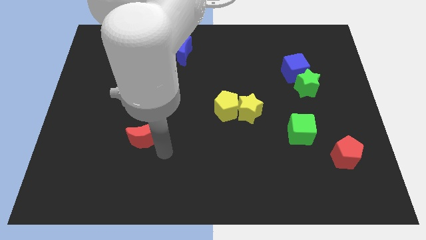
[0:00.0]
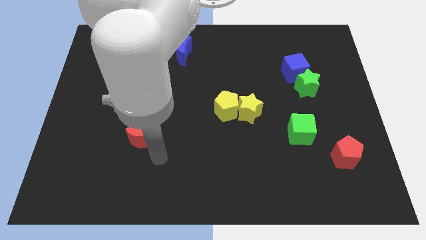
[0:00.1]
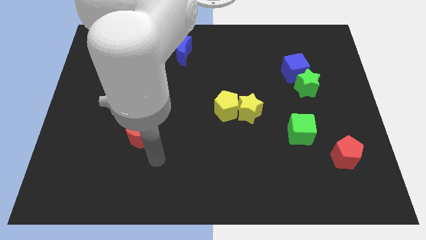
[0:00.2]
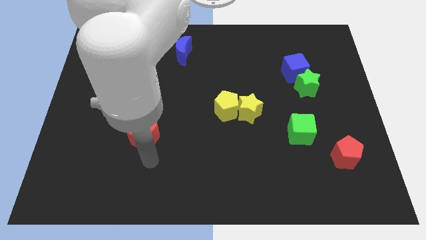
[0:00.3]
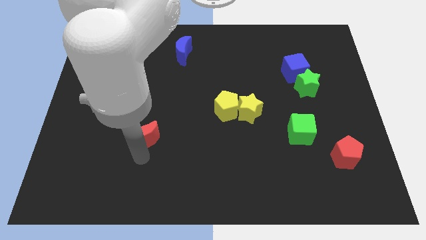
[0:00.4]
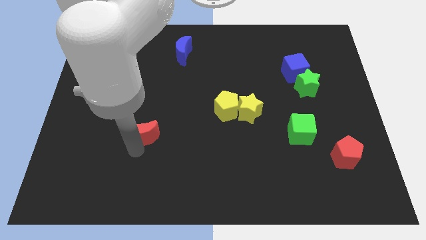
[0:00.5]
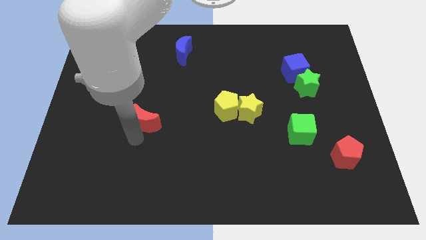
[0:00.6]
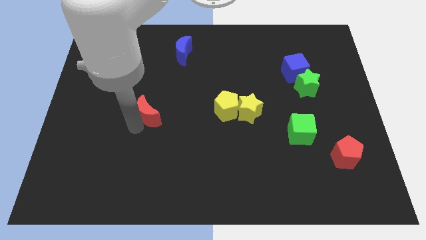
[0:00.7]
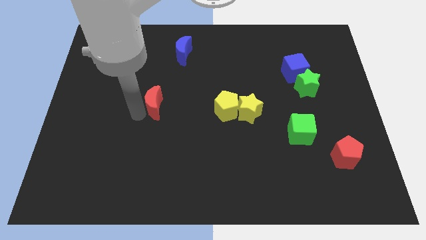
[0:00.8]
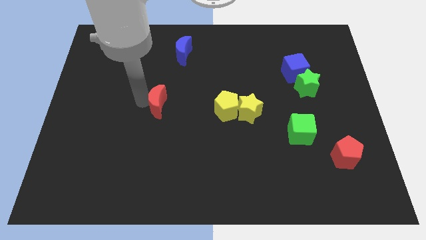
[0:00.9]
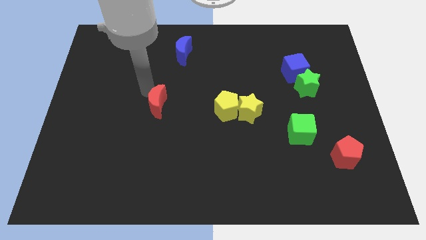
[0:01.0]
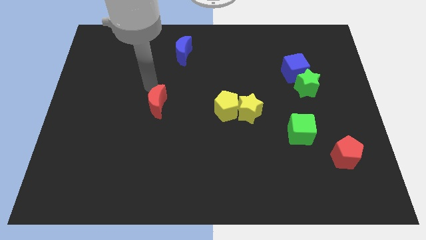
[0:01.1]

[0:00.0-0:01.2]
push the red crescent towards the top side of the board

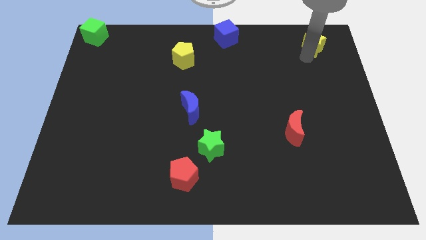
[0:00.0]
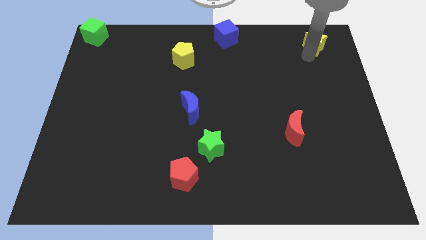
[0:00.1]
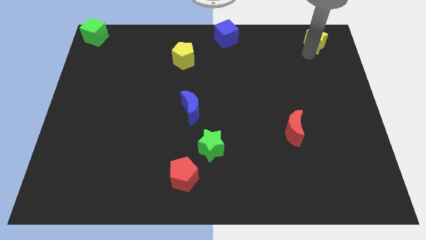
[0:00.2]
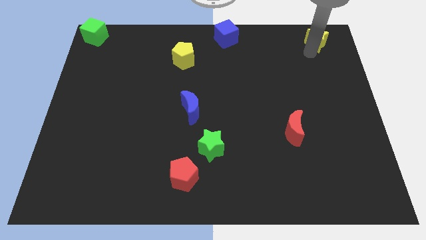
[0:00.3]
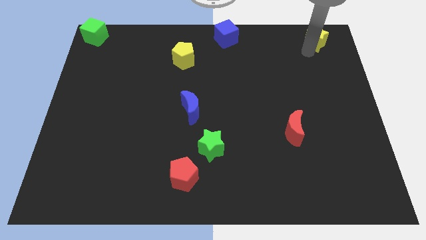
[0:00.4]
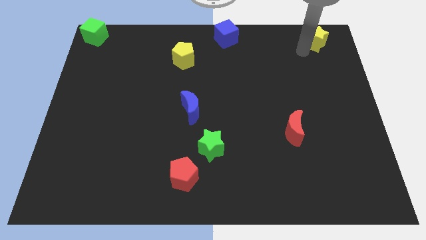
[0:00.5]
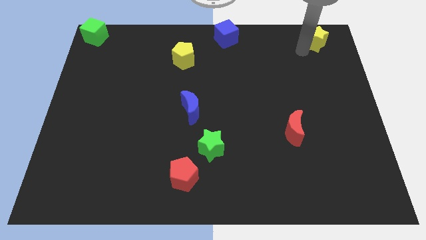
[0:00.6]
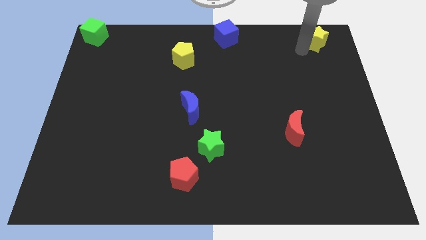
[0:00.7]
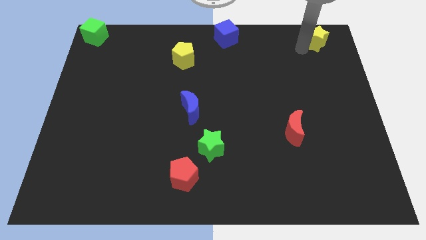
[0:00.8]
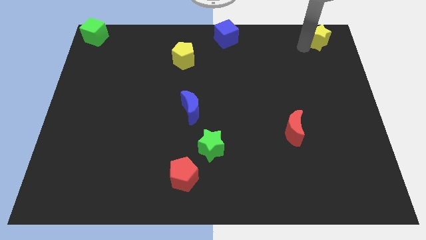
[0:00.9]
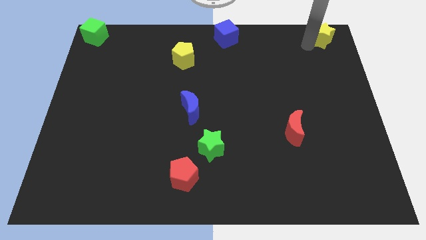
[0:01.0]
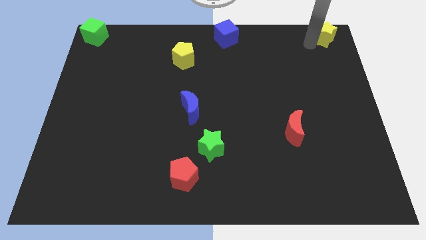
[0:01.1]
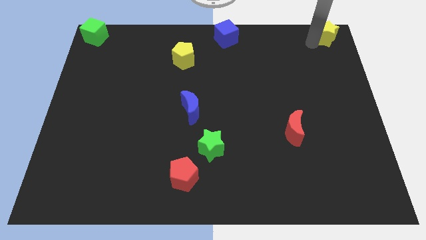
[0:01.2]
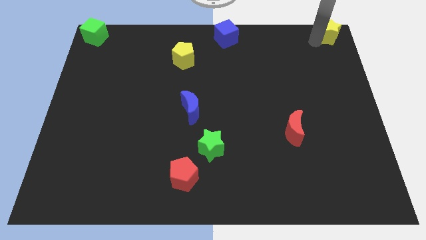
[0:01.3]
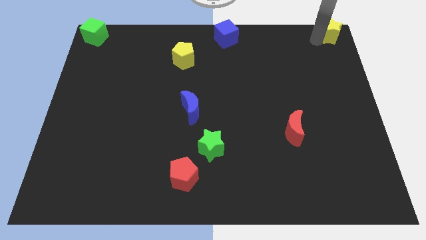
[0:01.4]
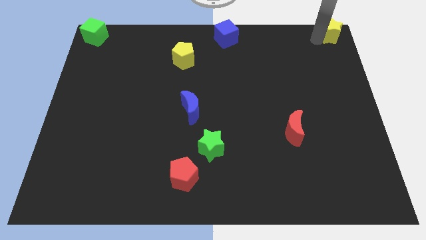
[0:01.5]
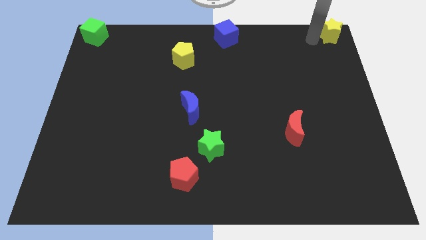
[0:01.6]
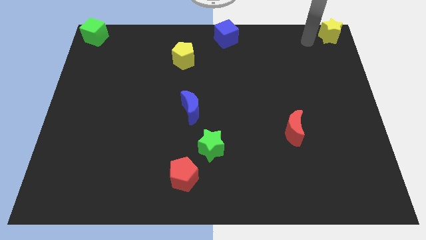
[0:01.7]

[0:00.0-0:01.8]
place the yellow star at the top right of the board

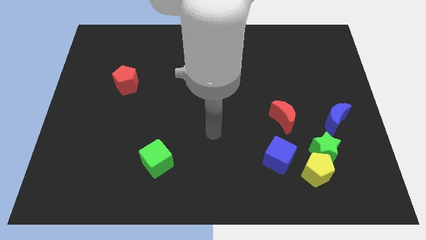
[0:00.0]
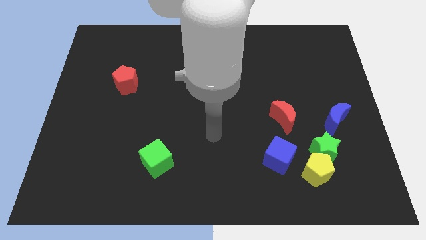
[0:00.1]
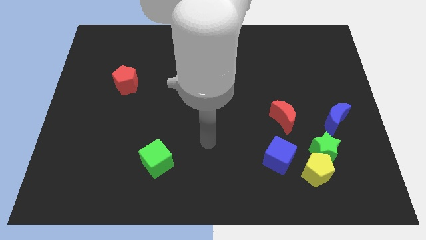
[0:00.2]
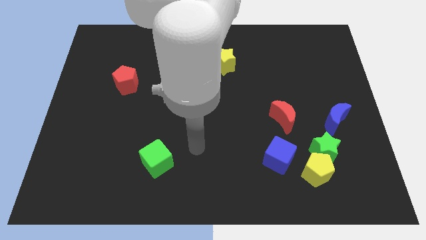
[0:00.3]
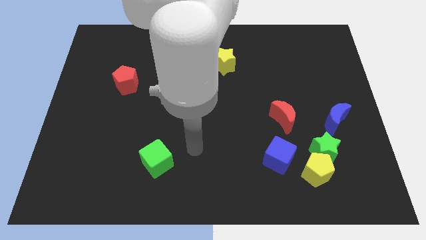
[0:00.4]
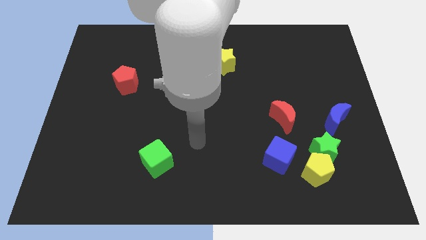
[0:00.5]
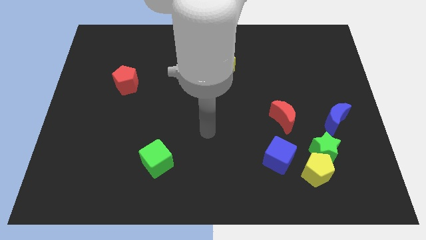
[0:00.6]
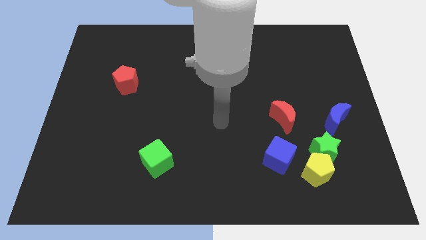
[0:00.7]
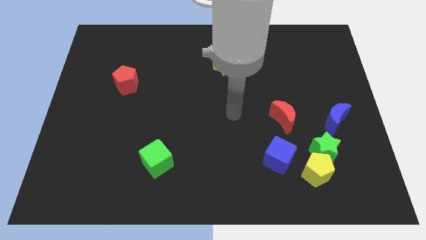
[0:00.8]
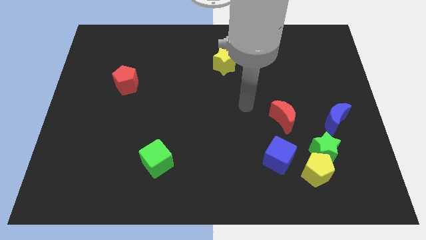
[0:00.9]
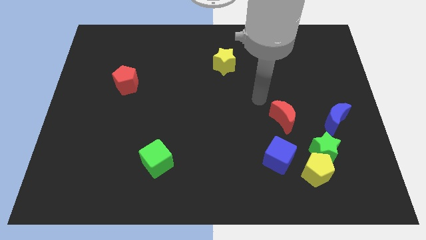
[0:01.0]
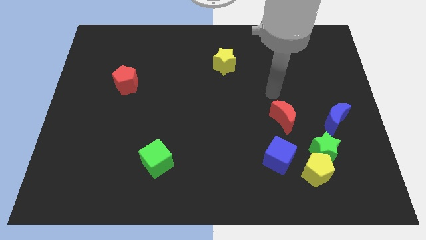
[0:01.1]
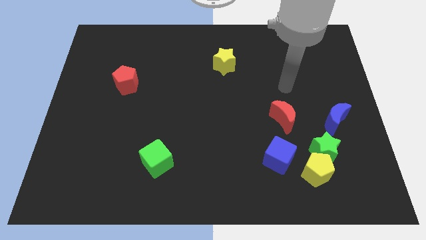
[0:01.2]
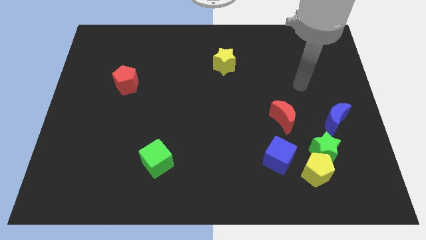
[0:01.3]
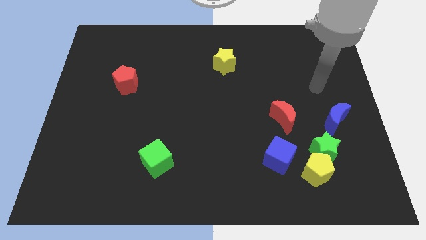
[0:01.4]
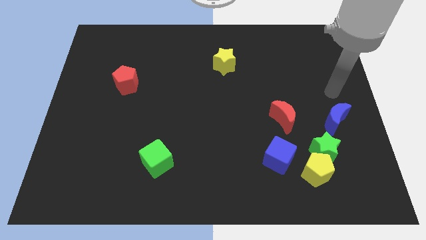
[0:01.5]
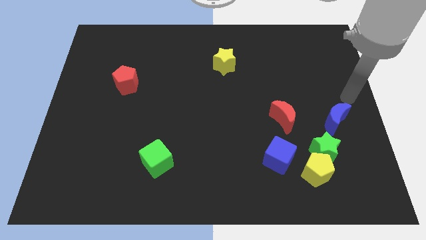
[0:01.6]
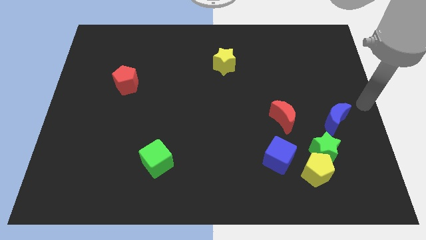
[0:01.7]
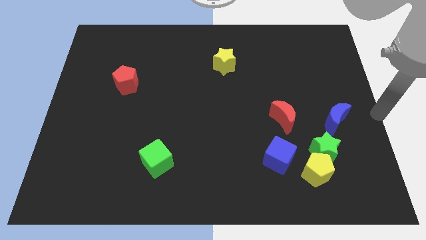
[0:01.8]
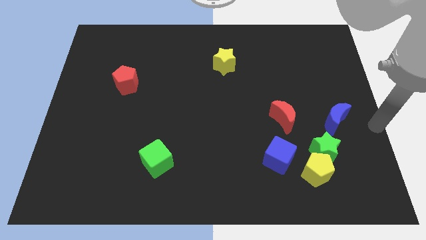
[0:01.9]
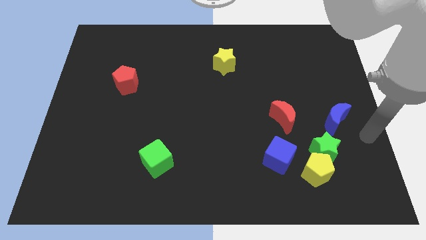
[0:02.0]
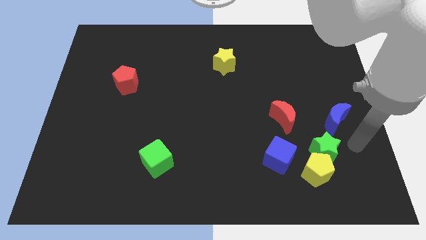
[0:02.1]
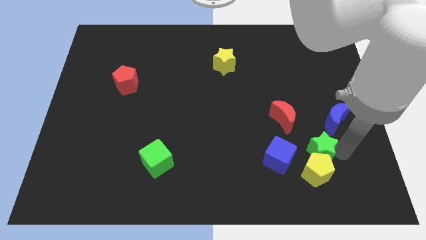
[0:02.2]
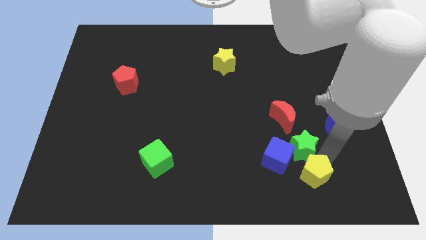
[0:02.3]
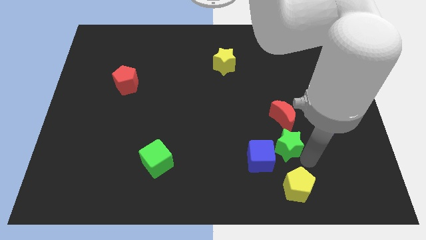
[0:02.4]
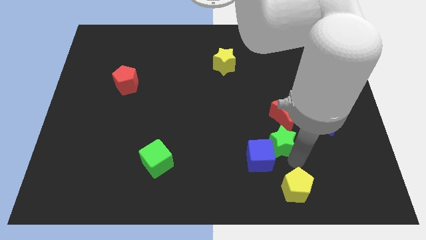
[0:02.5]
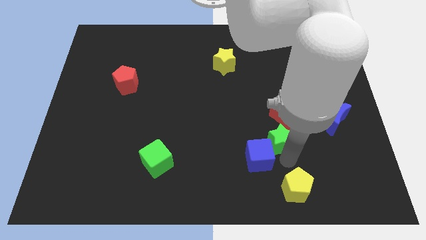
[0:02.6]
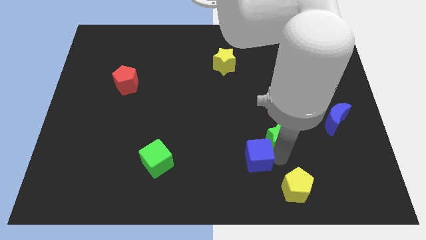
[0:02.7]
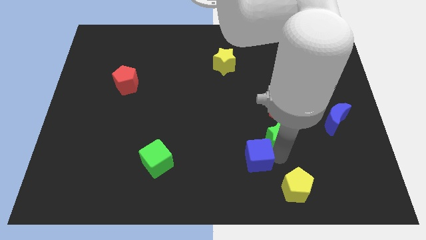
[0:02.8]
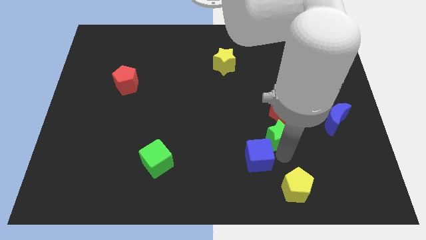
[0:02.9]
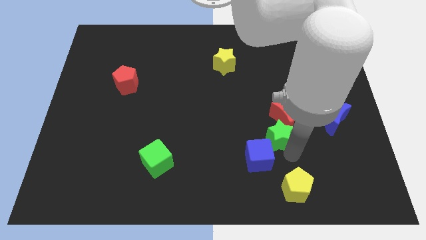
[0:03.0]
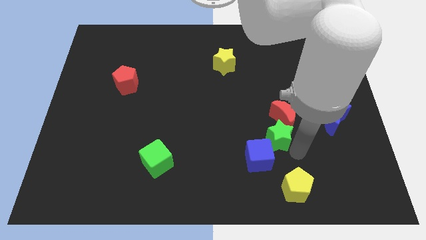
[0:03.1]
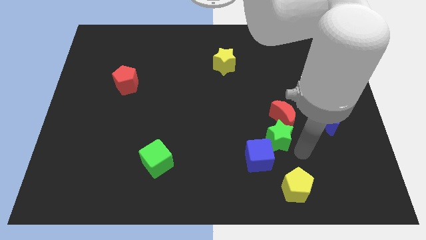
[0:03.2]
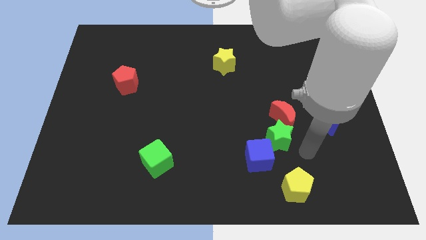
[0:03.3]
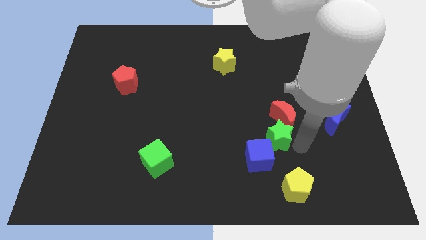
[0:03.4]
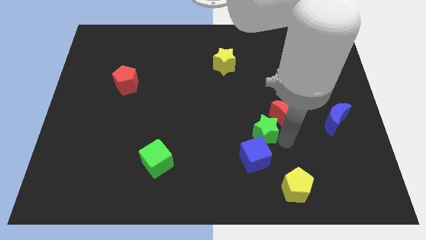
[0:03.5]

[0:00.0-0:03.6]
place green star between red moon and blue cube

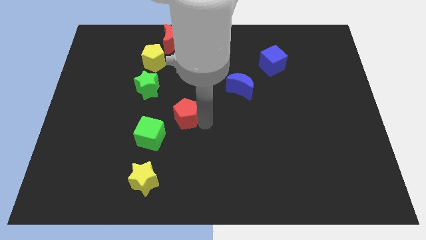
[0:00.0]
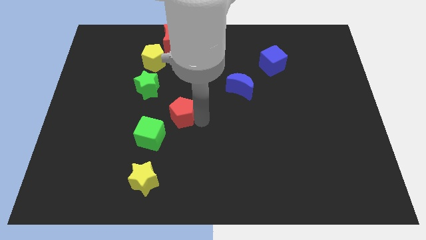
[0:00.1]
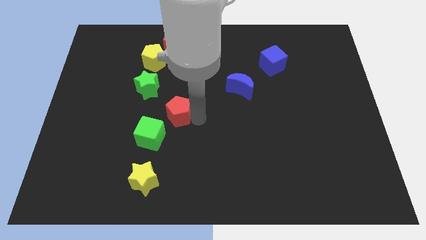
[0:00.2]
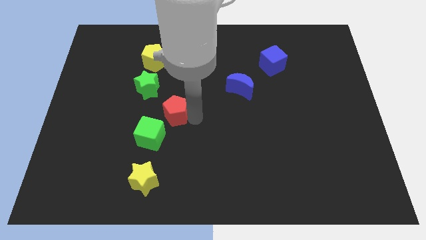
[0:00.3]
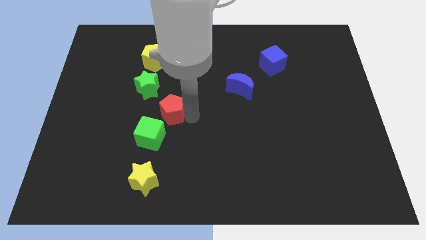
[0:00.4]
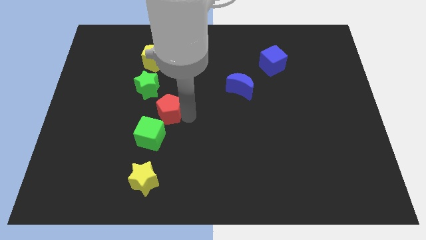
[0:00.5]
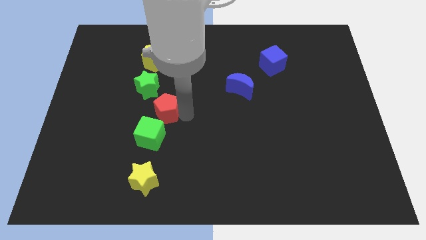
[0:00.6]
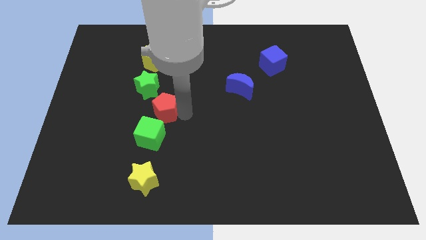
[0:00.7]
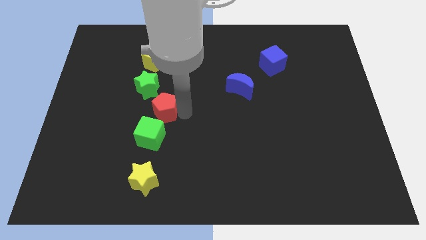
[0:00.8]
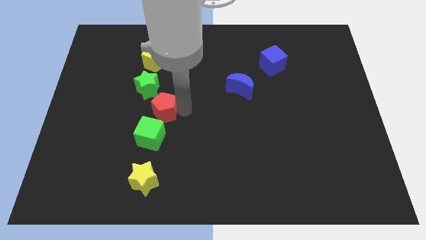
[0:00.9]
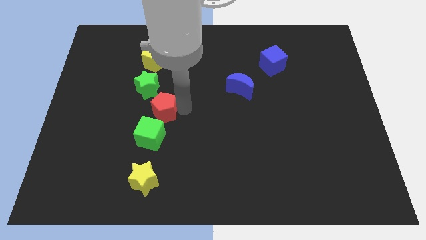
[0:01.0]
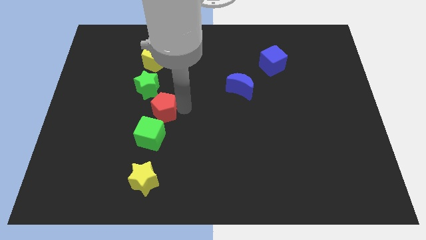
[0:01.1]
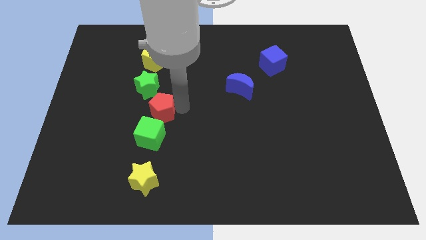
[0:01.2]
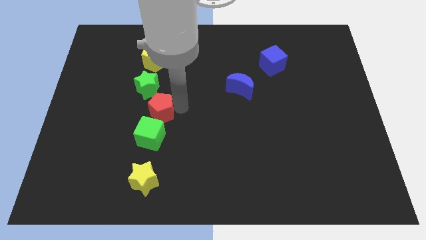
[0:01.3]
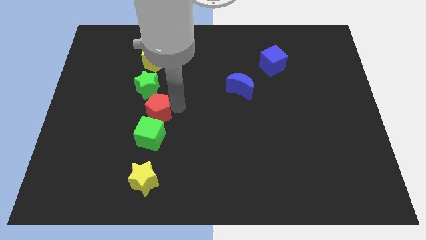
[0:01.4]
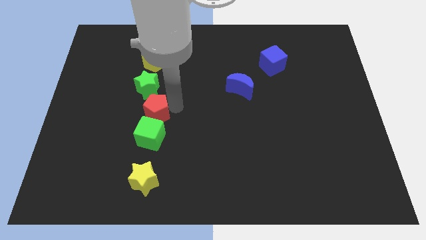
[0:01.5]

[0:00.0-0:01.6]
place the red pentagon in between the green cube and green star

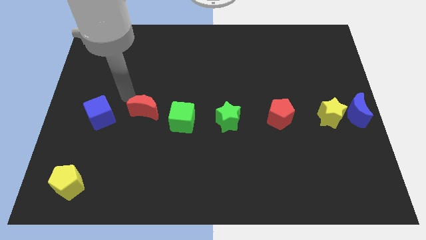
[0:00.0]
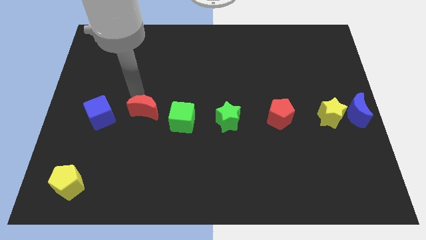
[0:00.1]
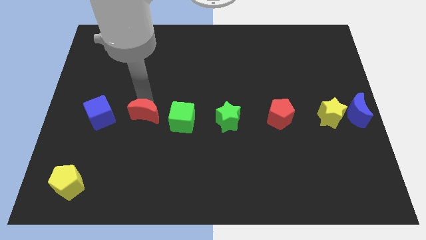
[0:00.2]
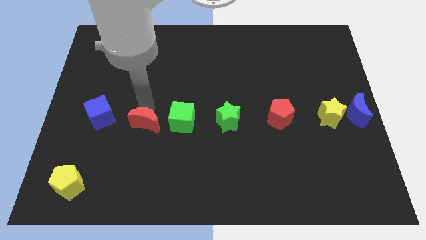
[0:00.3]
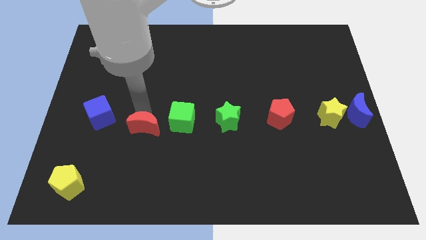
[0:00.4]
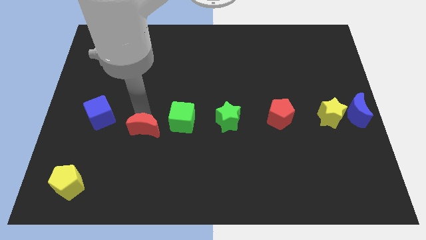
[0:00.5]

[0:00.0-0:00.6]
move the red crescent slightly to the down

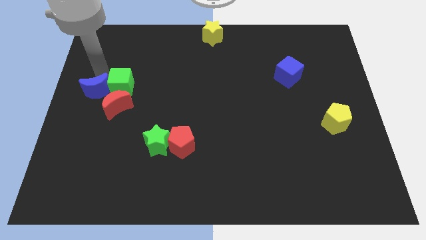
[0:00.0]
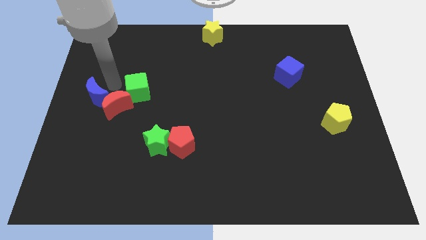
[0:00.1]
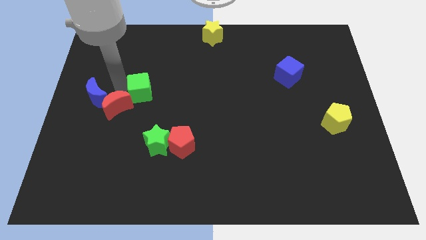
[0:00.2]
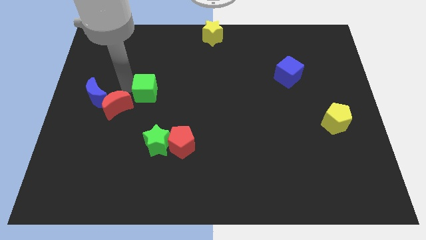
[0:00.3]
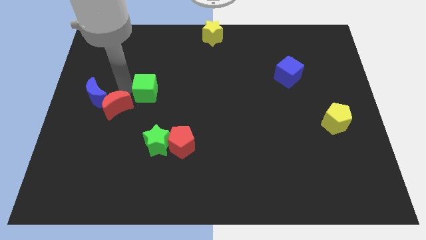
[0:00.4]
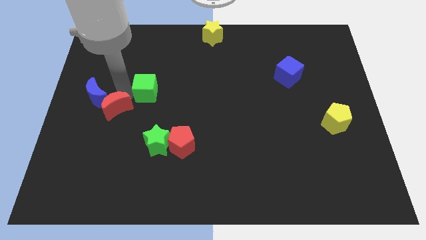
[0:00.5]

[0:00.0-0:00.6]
push the blue moon into green cube and red moon
